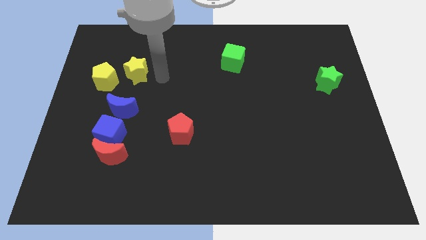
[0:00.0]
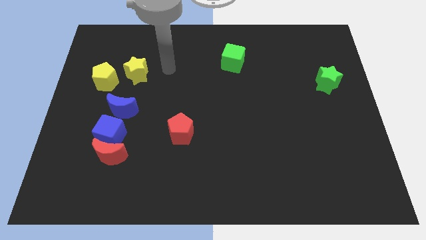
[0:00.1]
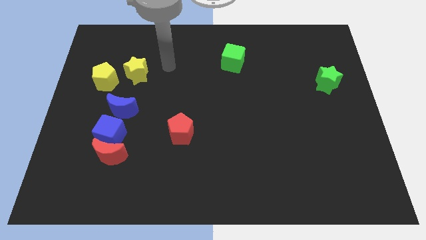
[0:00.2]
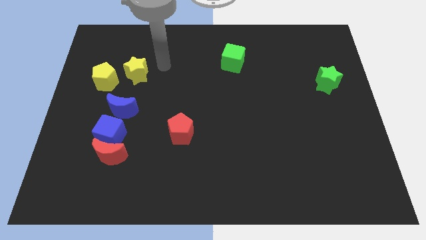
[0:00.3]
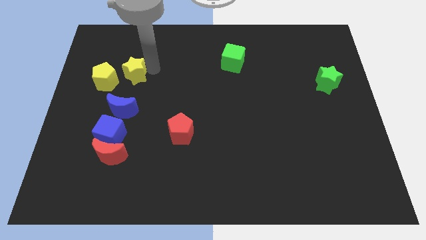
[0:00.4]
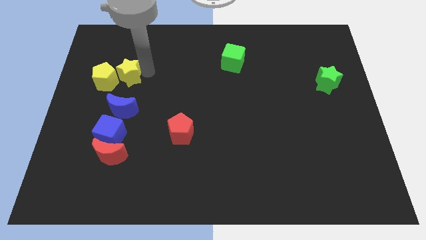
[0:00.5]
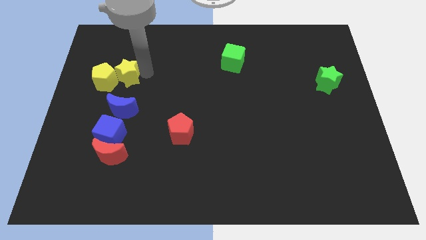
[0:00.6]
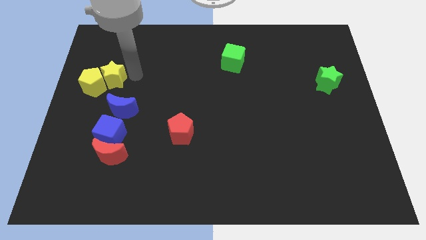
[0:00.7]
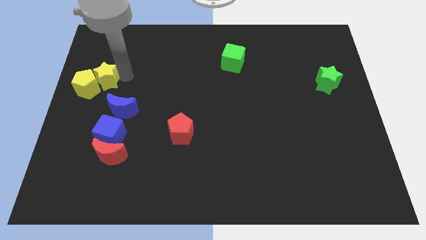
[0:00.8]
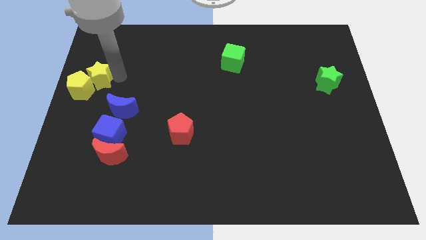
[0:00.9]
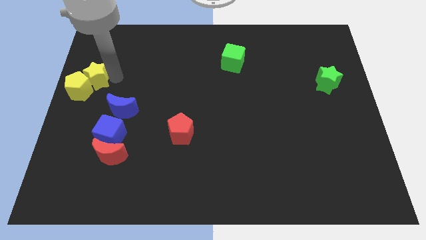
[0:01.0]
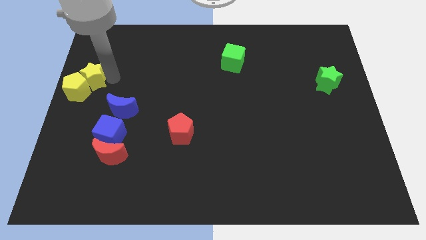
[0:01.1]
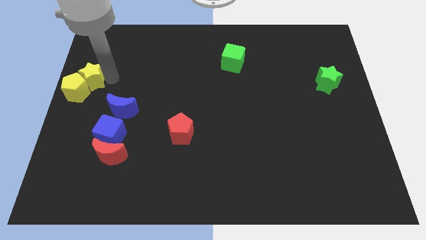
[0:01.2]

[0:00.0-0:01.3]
push yellow star into yellow pentagon

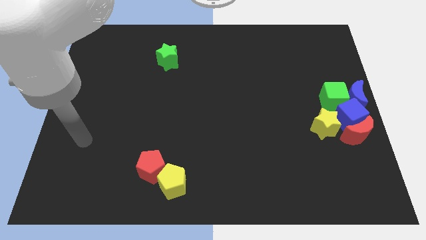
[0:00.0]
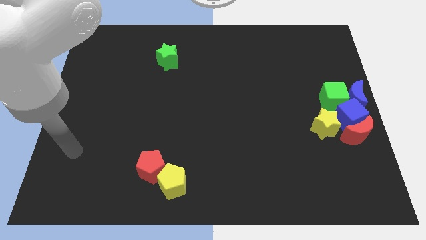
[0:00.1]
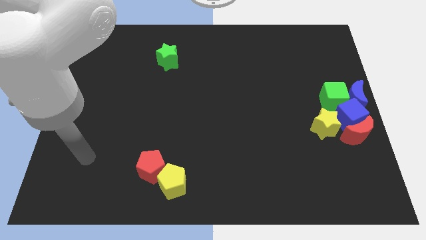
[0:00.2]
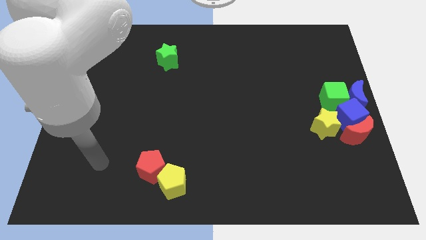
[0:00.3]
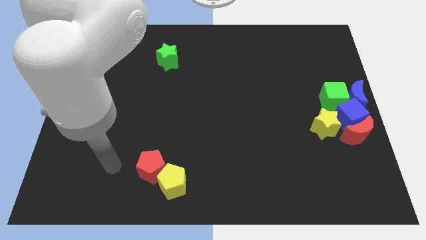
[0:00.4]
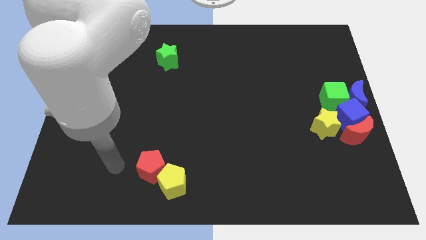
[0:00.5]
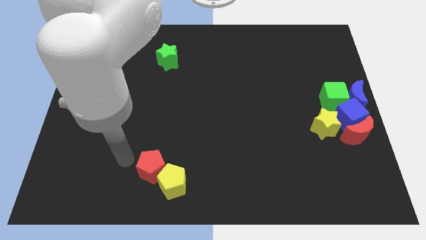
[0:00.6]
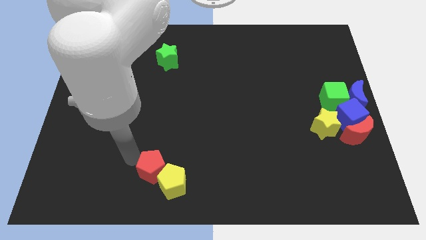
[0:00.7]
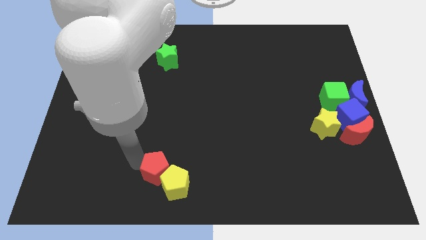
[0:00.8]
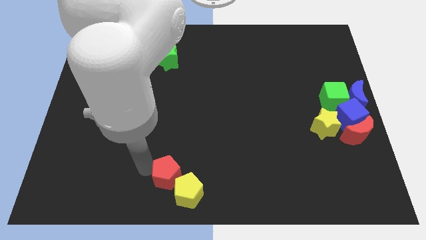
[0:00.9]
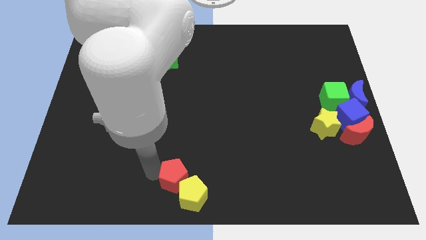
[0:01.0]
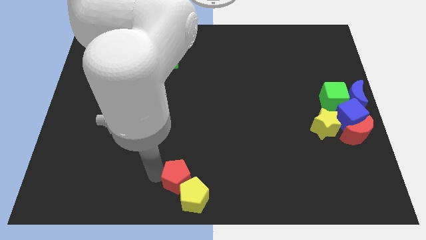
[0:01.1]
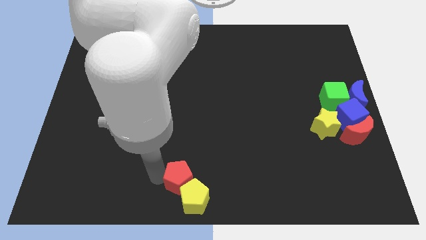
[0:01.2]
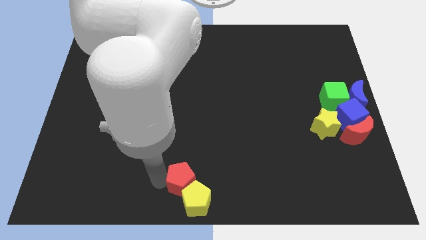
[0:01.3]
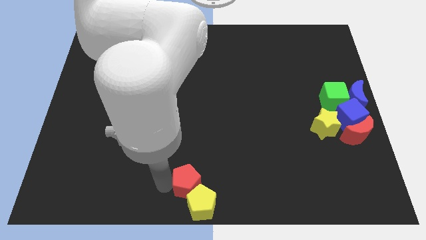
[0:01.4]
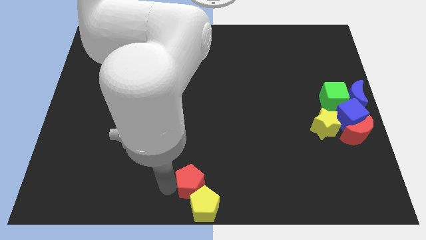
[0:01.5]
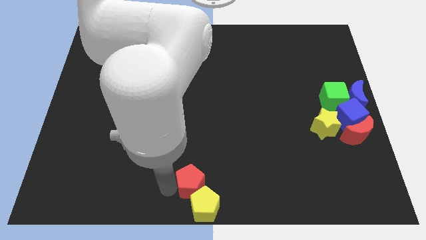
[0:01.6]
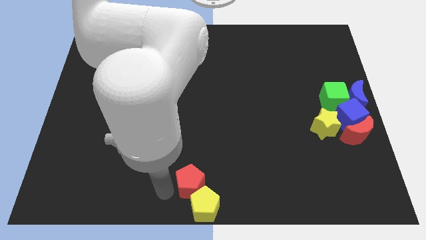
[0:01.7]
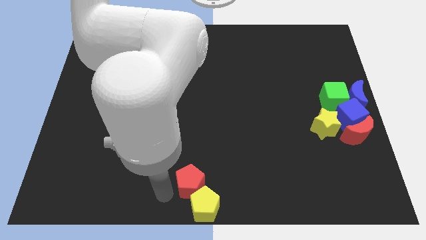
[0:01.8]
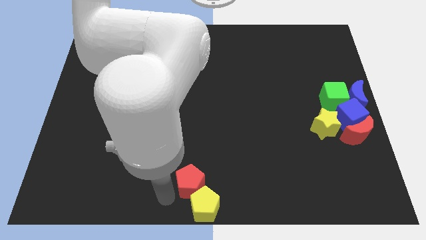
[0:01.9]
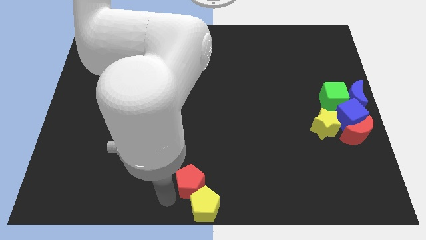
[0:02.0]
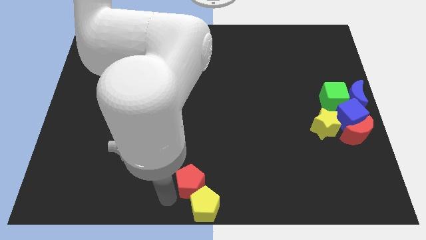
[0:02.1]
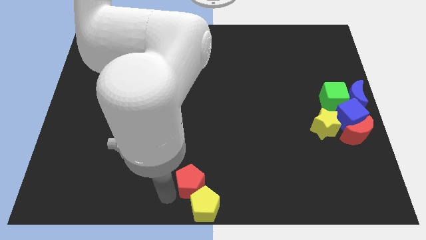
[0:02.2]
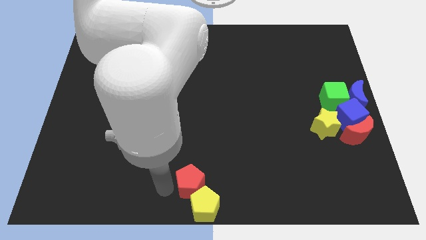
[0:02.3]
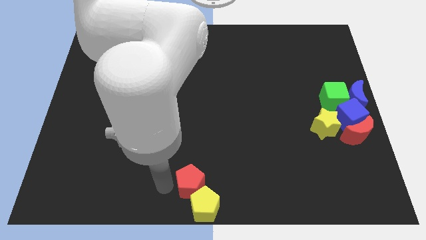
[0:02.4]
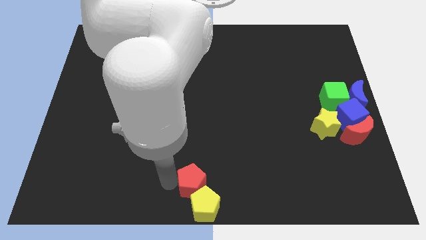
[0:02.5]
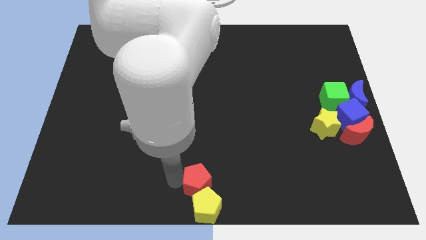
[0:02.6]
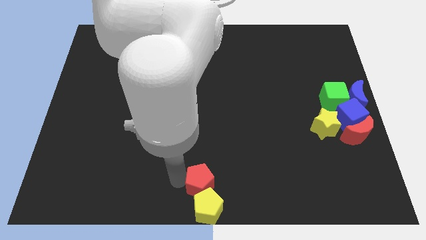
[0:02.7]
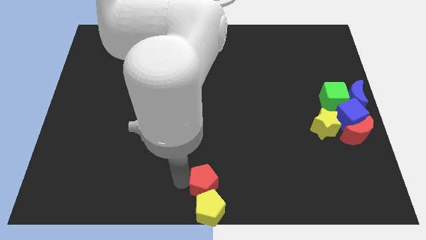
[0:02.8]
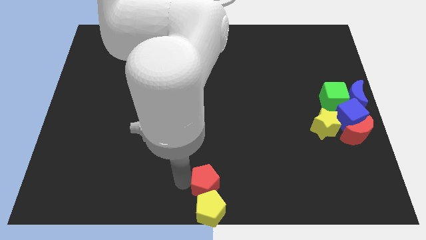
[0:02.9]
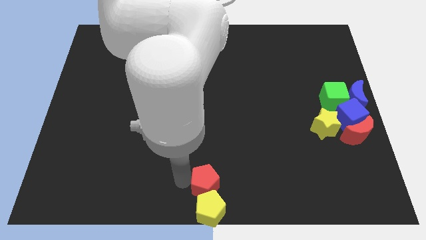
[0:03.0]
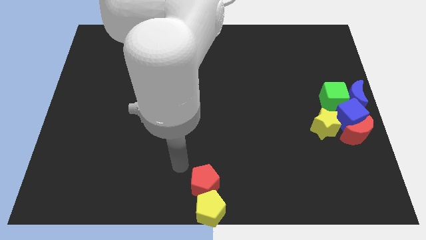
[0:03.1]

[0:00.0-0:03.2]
push red and yellow pentagon towards bottom middle of the board

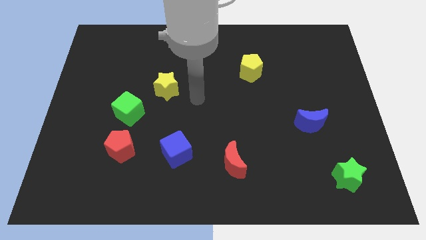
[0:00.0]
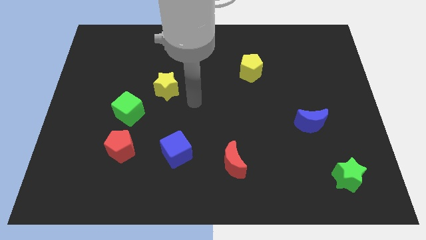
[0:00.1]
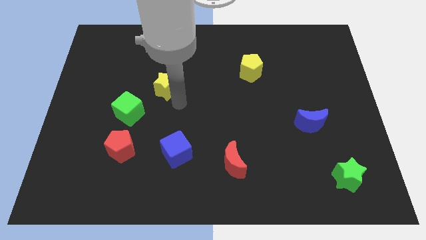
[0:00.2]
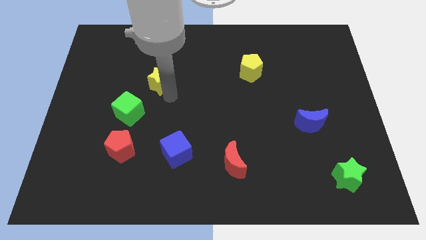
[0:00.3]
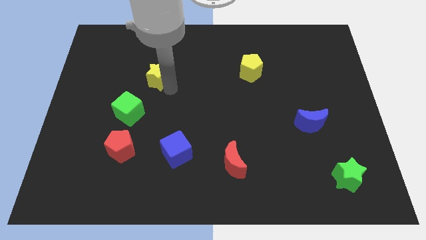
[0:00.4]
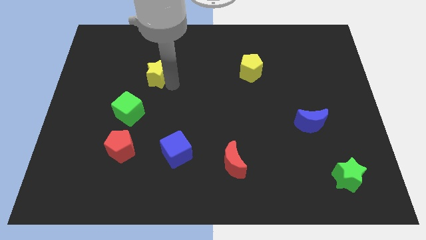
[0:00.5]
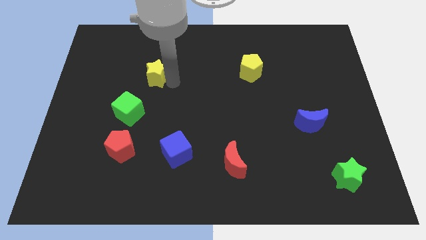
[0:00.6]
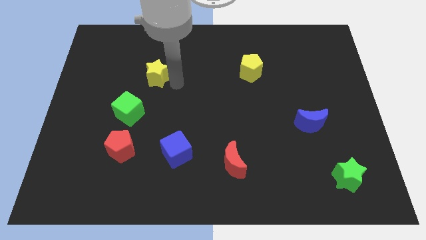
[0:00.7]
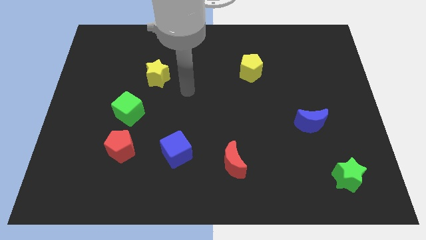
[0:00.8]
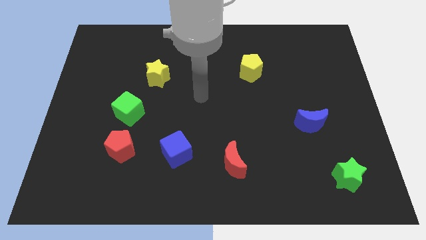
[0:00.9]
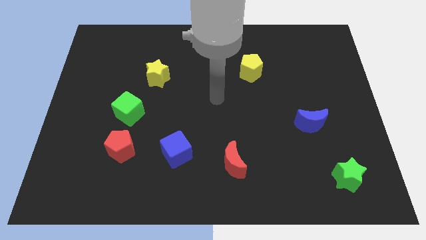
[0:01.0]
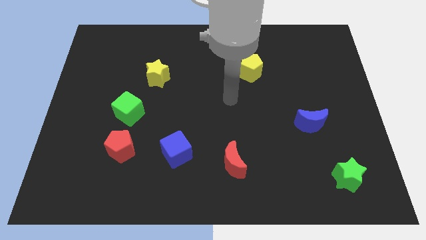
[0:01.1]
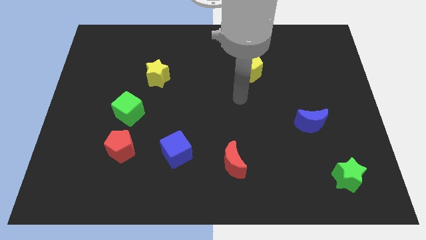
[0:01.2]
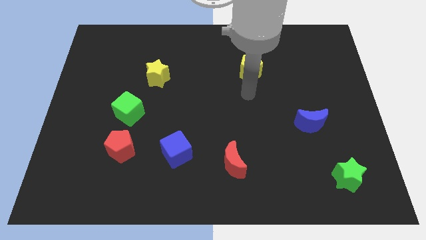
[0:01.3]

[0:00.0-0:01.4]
put the yellow star at the top right side of green cube

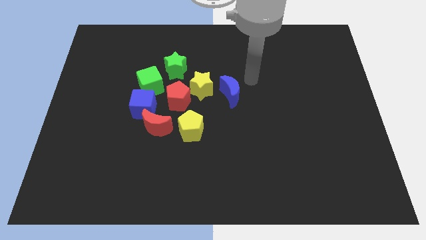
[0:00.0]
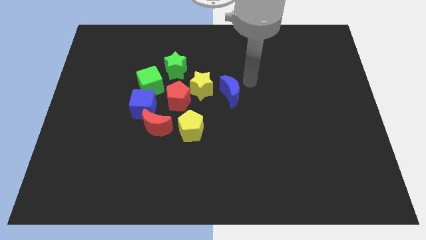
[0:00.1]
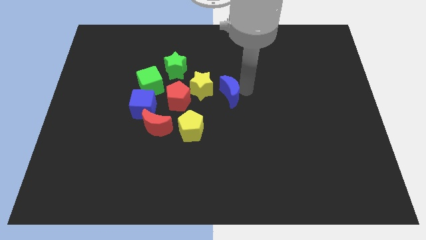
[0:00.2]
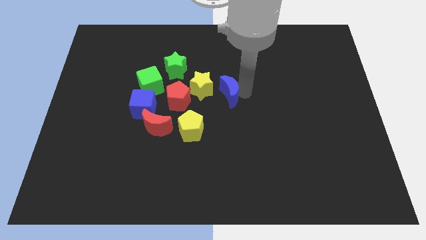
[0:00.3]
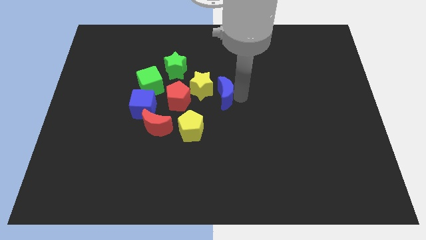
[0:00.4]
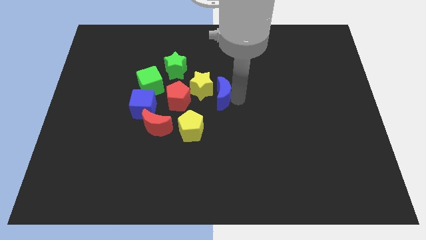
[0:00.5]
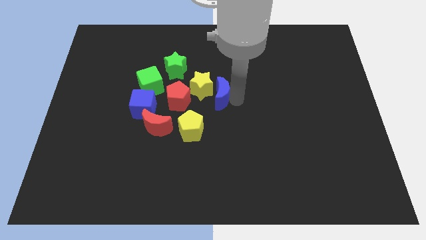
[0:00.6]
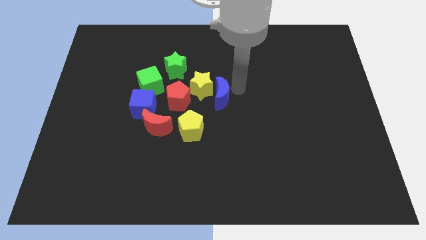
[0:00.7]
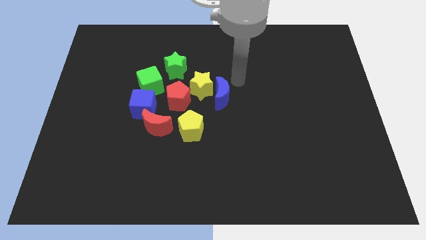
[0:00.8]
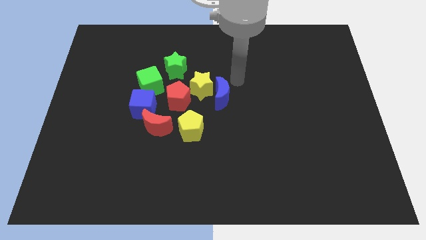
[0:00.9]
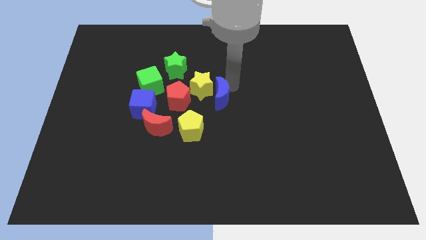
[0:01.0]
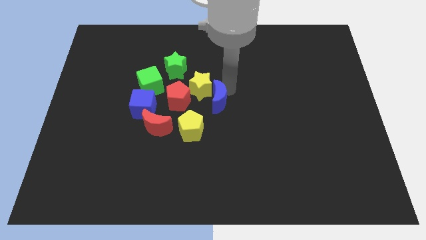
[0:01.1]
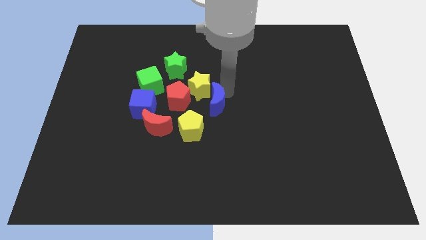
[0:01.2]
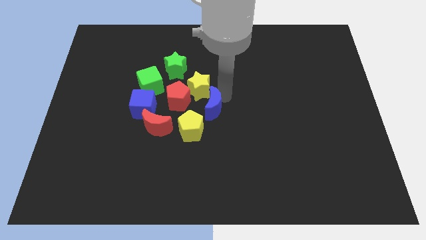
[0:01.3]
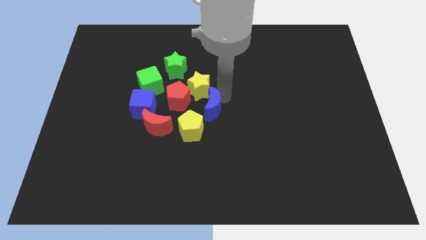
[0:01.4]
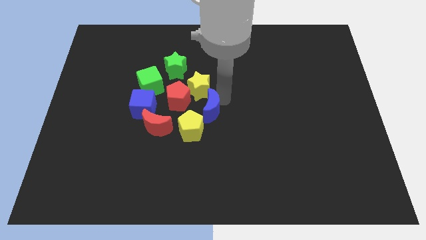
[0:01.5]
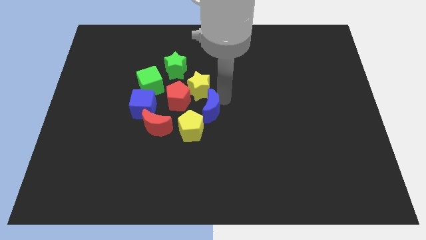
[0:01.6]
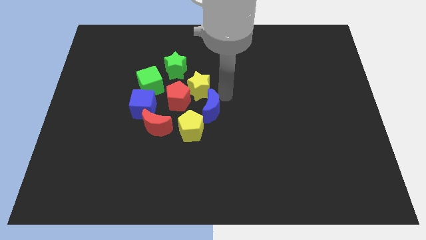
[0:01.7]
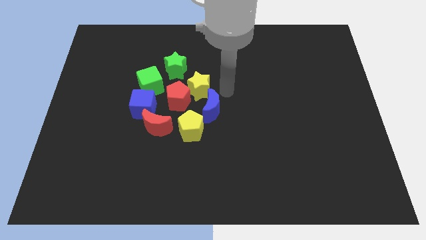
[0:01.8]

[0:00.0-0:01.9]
move the blue moon into the group of blocks

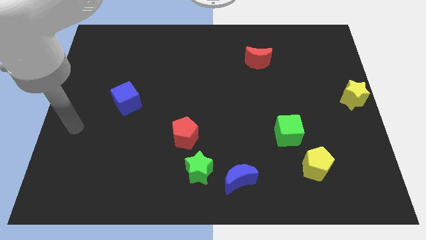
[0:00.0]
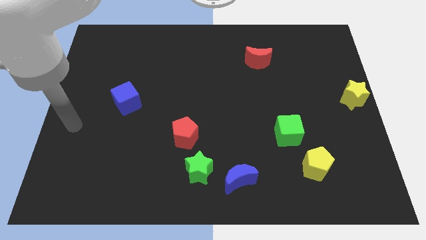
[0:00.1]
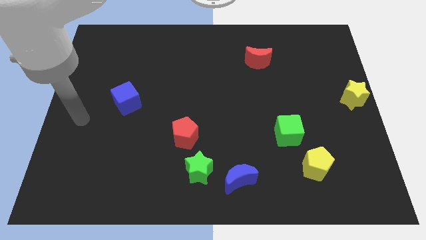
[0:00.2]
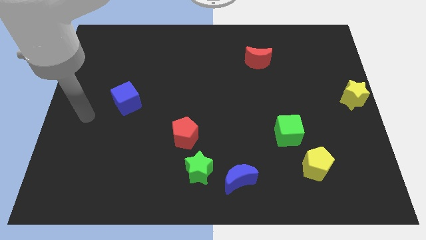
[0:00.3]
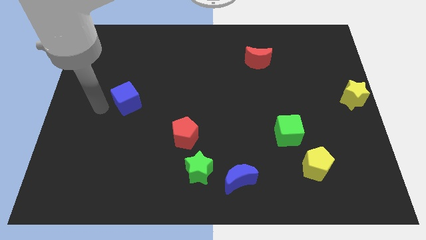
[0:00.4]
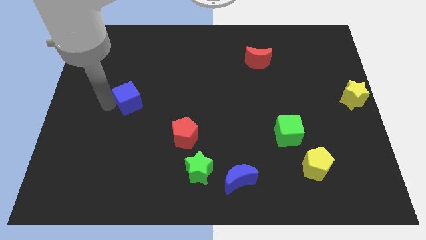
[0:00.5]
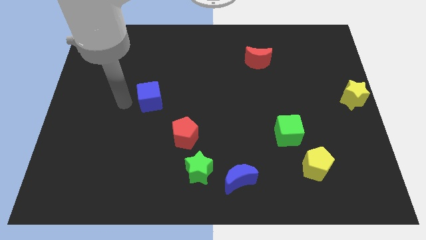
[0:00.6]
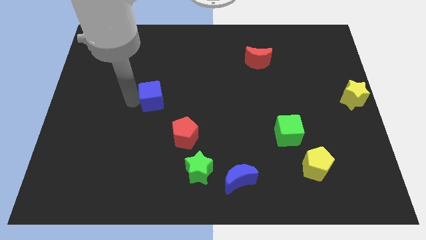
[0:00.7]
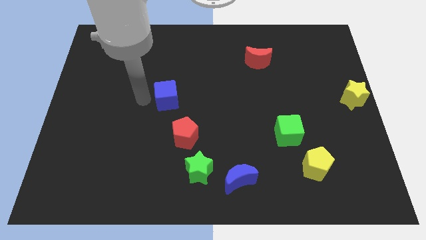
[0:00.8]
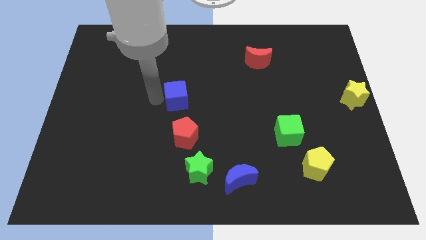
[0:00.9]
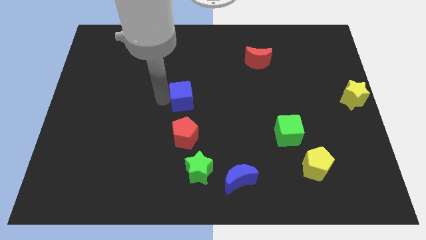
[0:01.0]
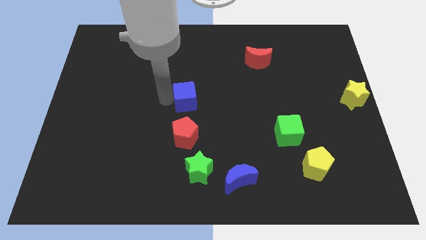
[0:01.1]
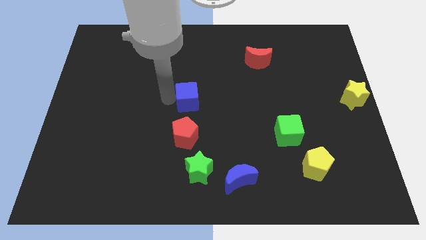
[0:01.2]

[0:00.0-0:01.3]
place the blue cube above the red pentagon
